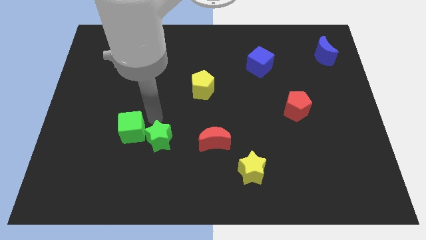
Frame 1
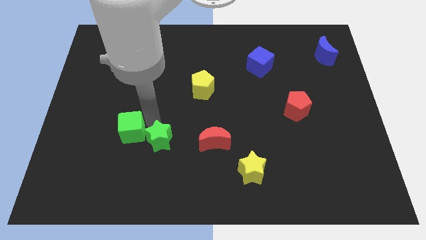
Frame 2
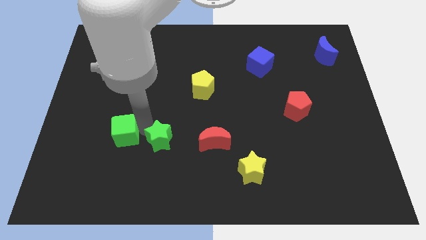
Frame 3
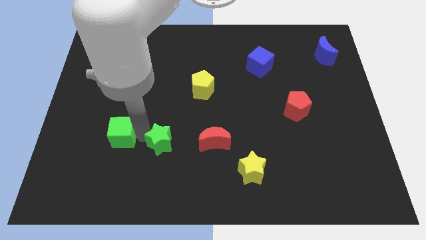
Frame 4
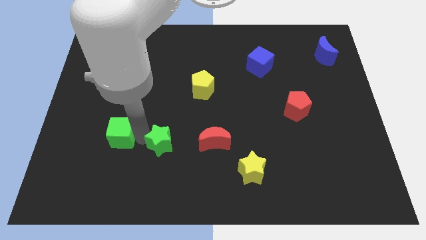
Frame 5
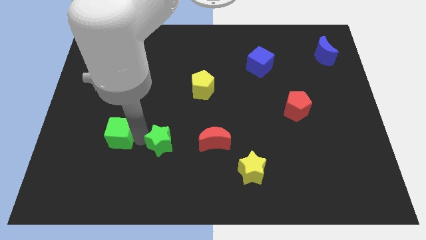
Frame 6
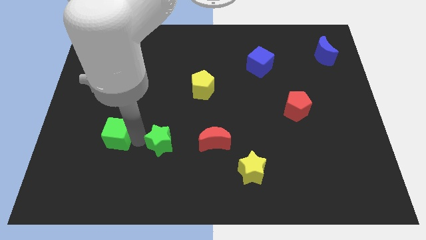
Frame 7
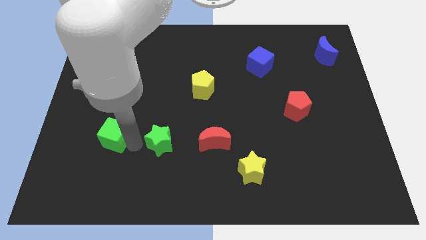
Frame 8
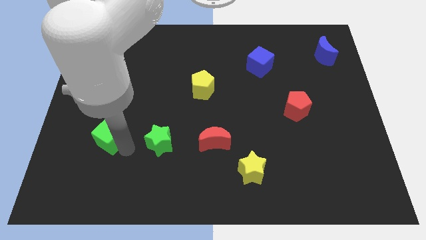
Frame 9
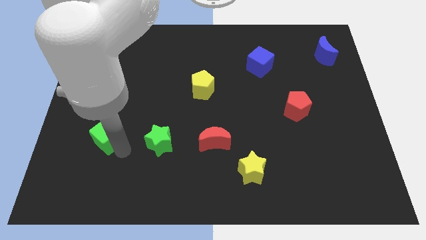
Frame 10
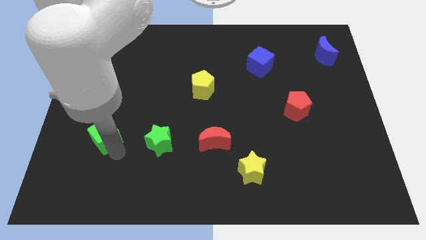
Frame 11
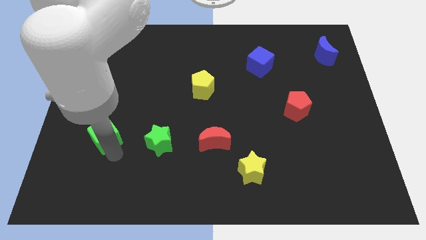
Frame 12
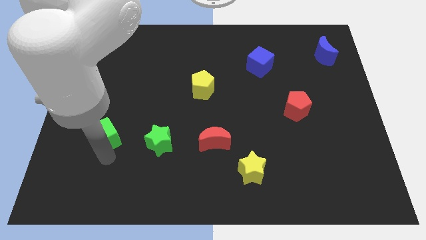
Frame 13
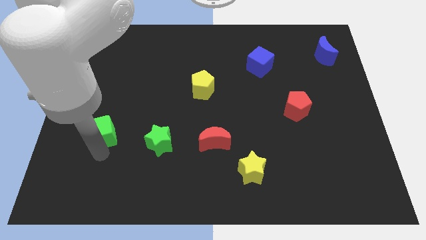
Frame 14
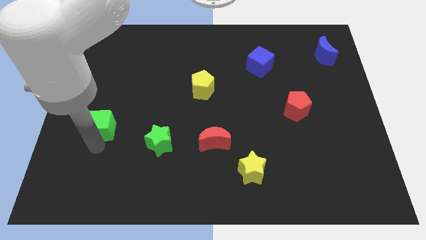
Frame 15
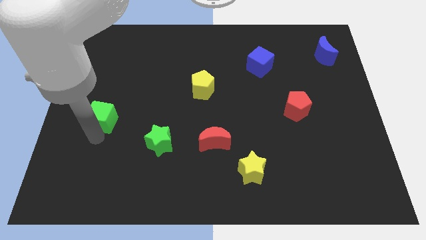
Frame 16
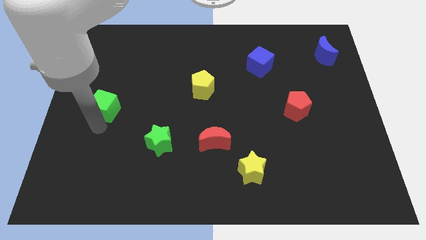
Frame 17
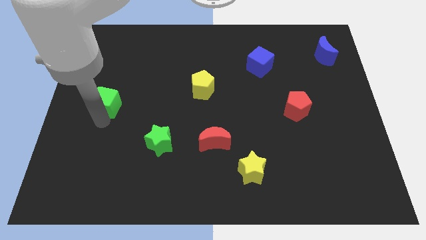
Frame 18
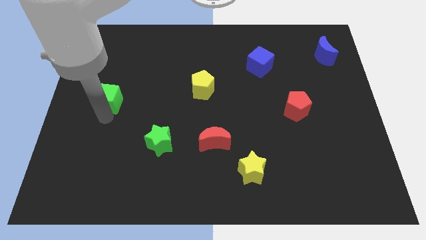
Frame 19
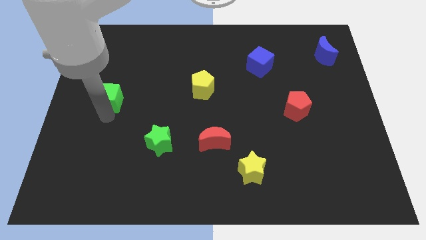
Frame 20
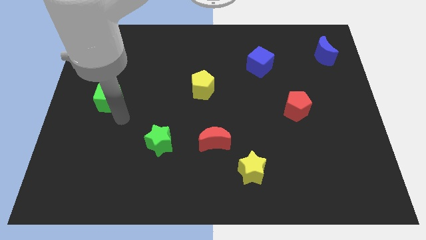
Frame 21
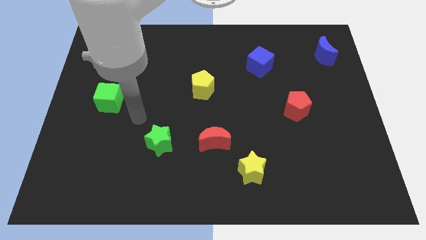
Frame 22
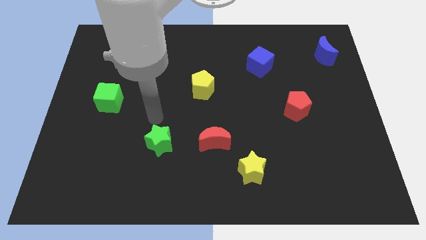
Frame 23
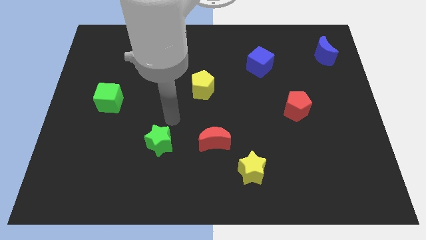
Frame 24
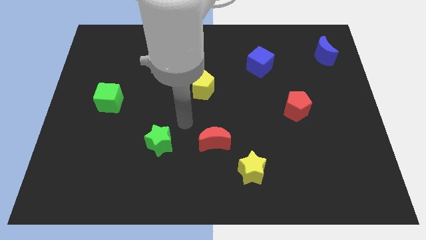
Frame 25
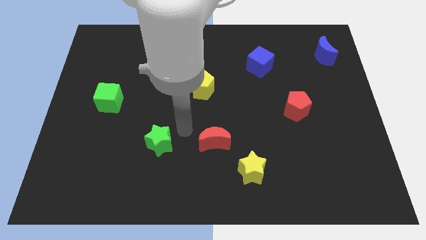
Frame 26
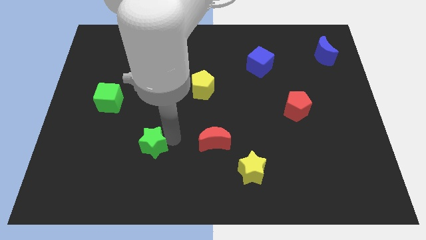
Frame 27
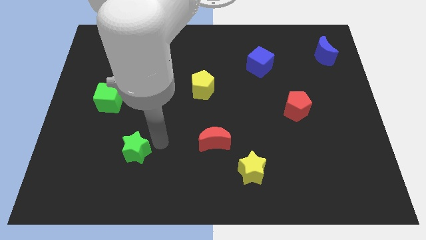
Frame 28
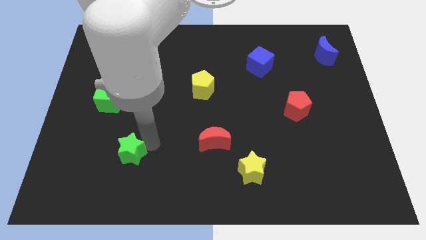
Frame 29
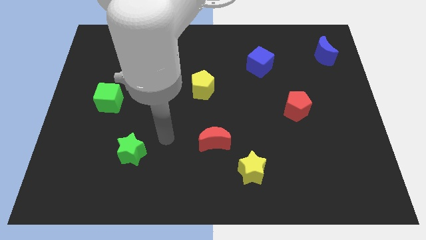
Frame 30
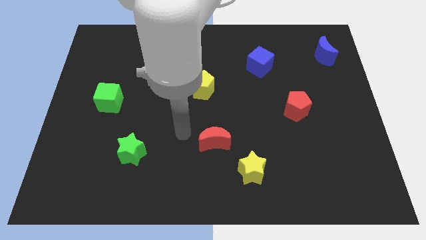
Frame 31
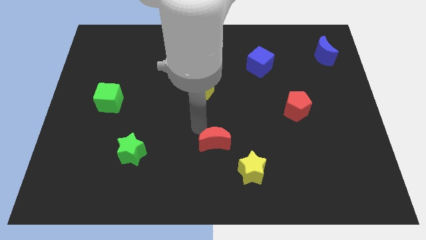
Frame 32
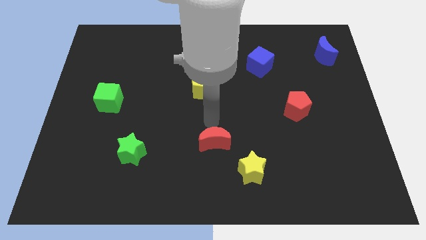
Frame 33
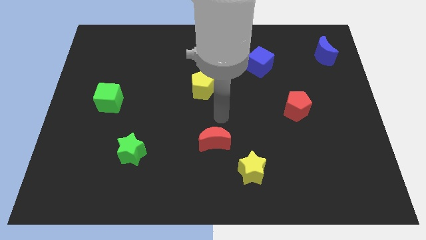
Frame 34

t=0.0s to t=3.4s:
separate green cube from green star

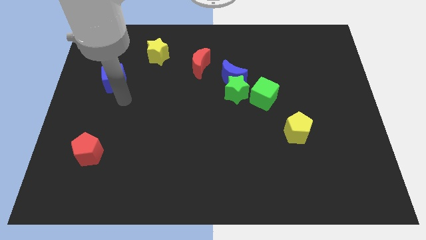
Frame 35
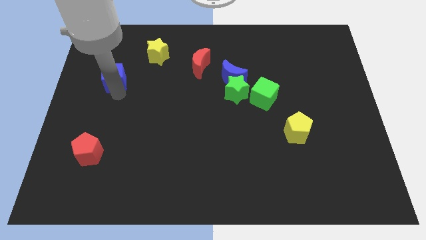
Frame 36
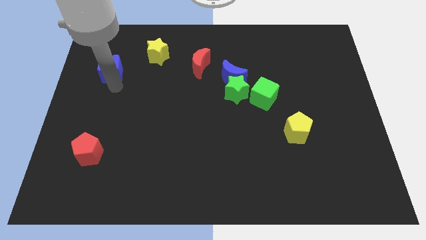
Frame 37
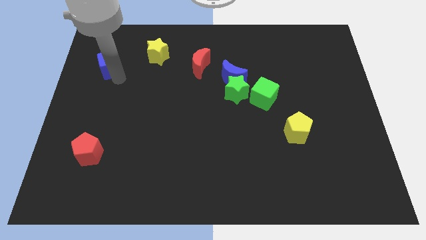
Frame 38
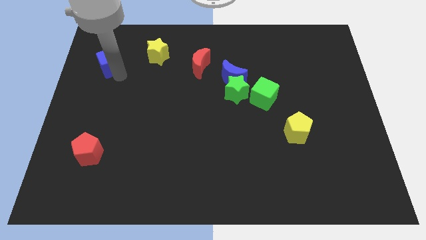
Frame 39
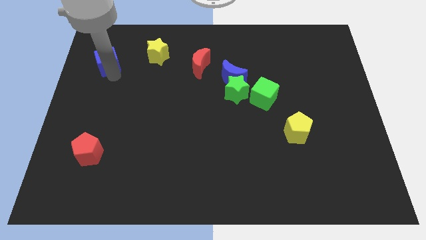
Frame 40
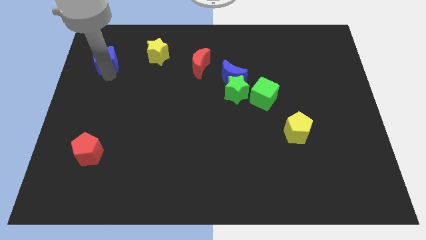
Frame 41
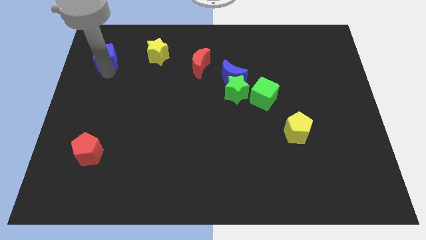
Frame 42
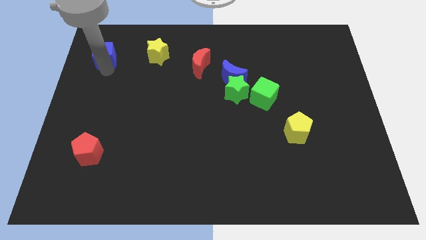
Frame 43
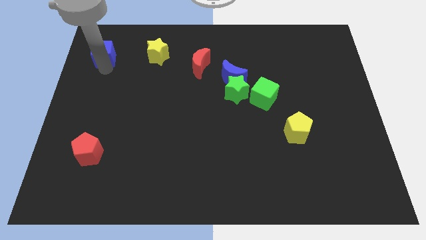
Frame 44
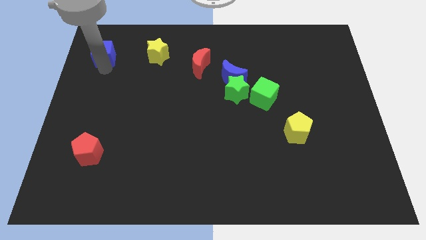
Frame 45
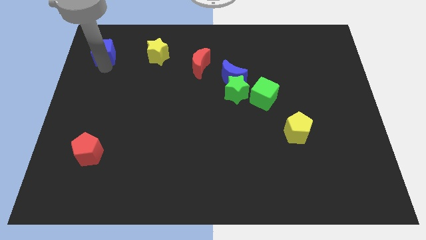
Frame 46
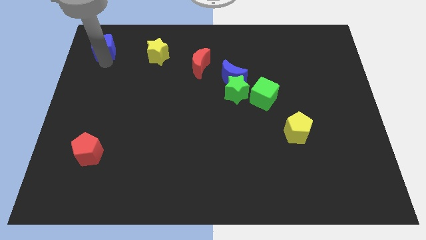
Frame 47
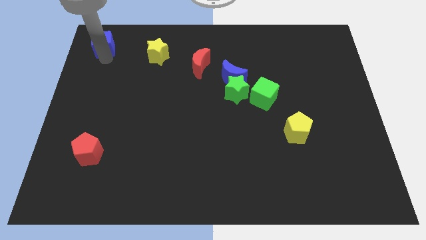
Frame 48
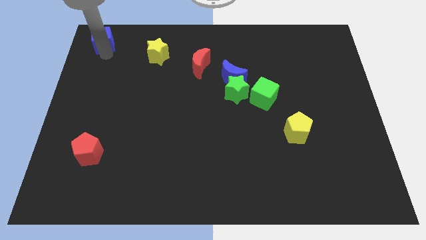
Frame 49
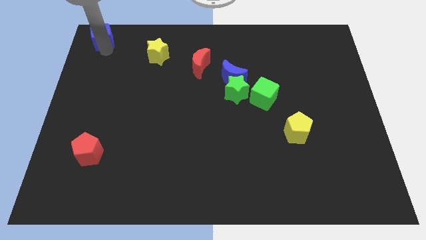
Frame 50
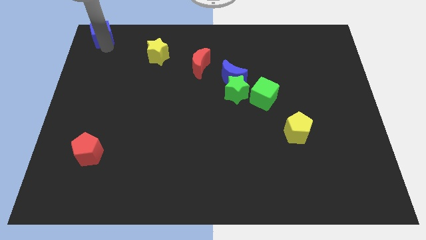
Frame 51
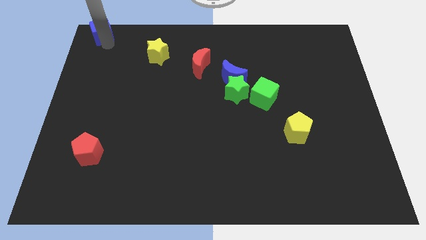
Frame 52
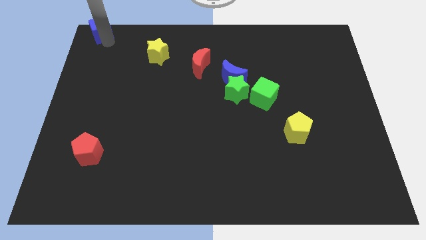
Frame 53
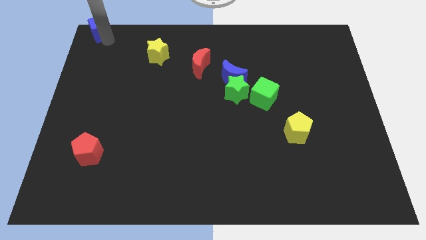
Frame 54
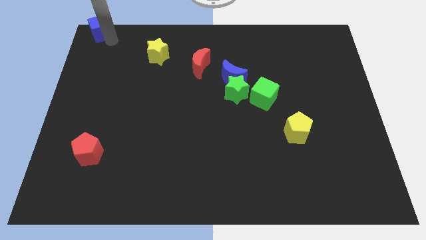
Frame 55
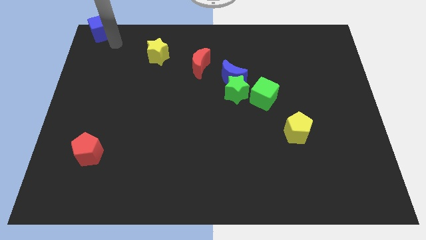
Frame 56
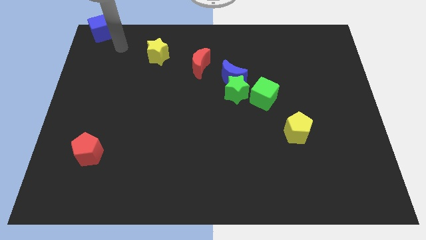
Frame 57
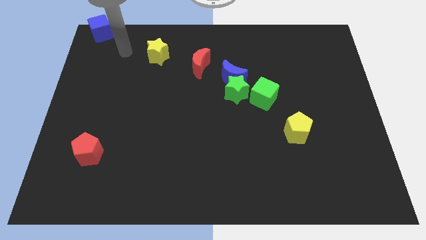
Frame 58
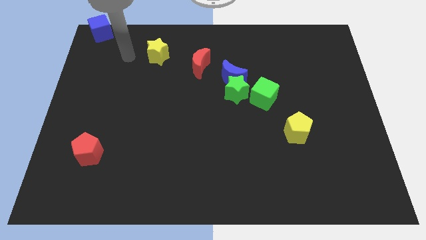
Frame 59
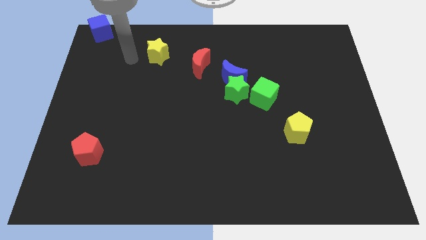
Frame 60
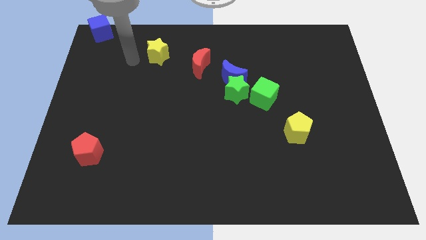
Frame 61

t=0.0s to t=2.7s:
place the blue cube towards top left corner of the board

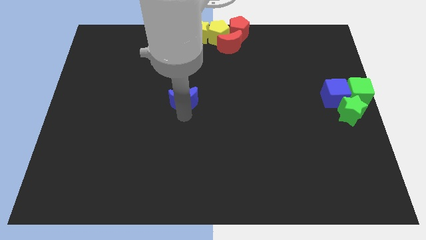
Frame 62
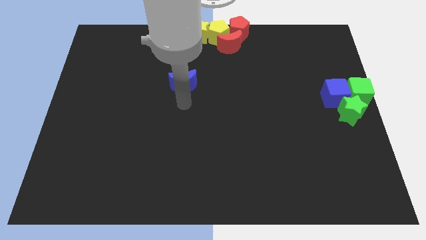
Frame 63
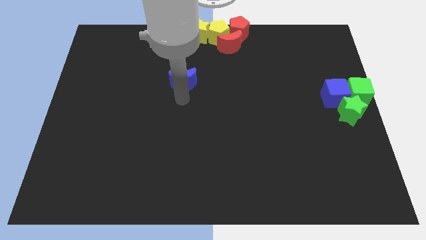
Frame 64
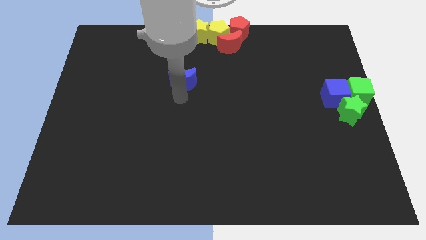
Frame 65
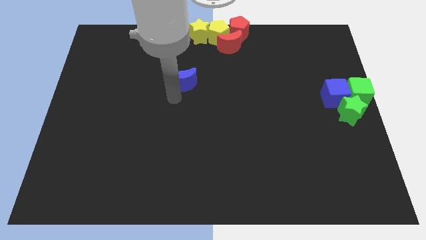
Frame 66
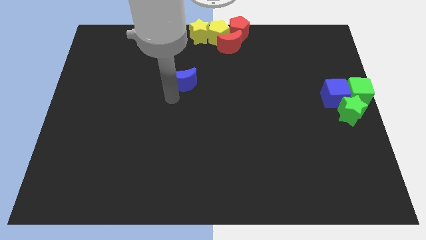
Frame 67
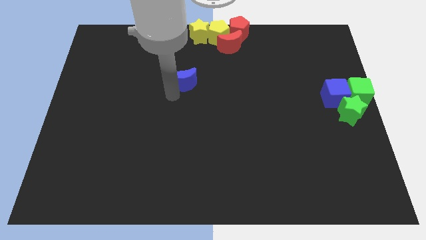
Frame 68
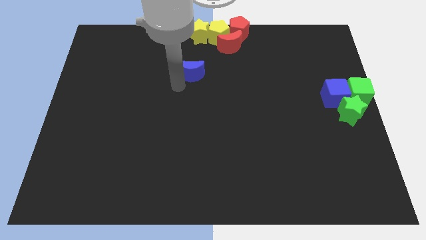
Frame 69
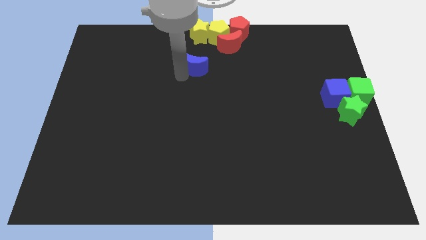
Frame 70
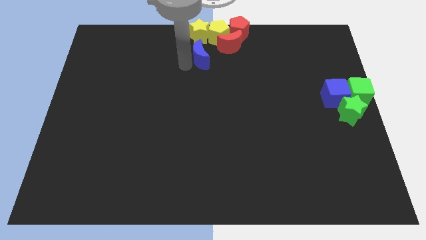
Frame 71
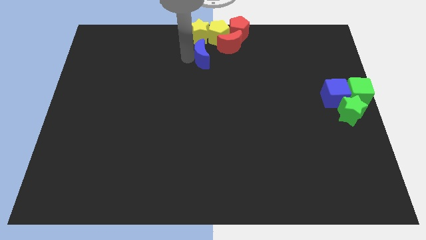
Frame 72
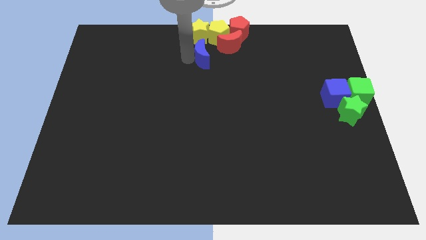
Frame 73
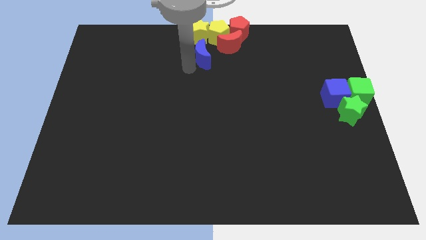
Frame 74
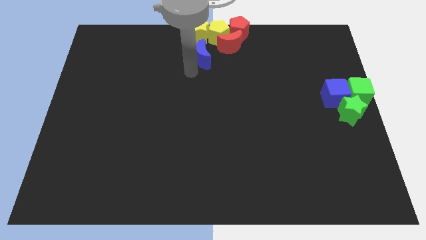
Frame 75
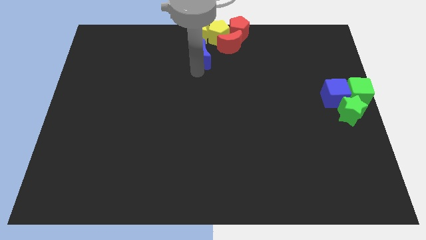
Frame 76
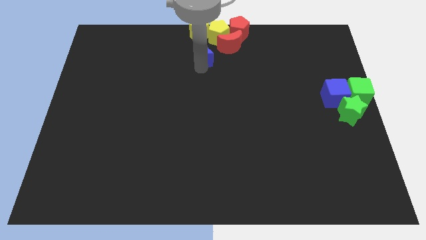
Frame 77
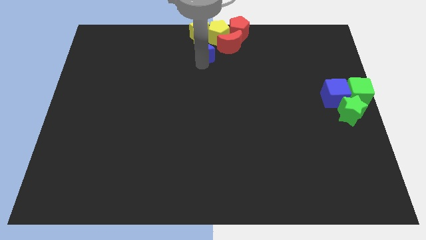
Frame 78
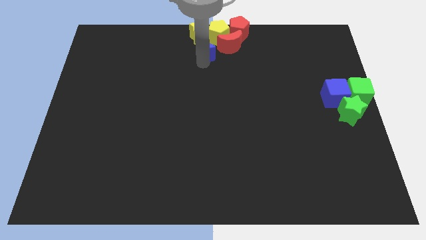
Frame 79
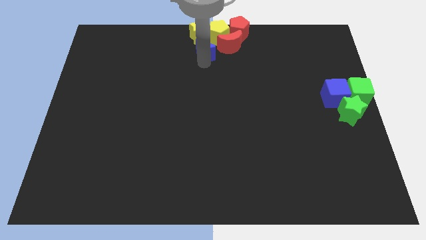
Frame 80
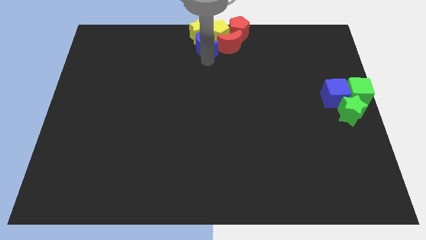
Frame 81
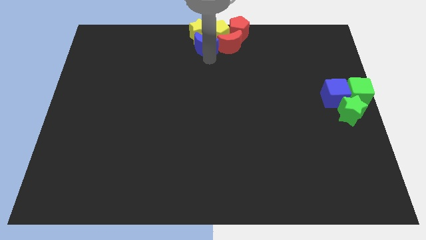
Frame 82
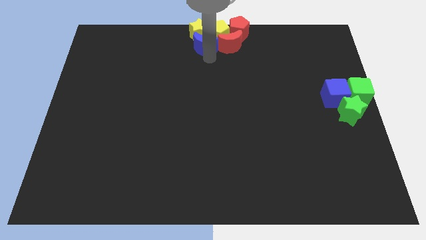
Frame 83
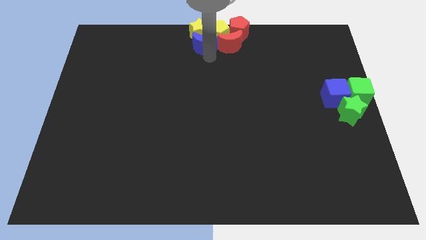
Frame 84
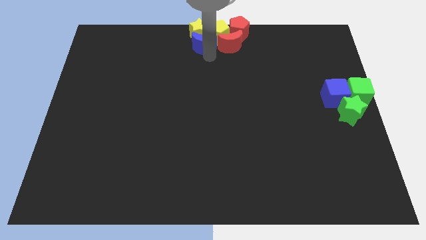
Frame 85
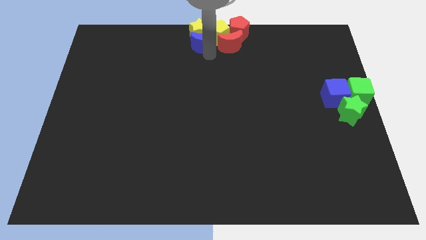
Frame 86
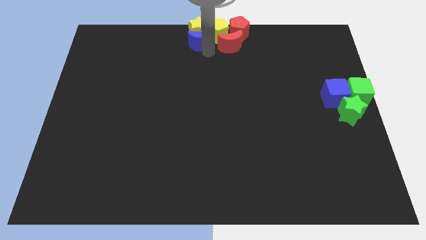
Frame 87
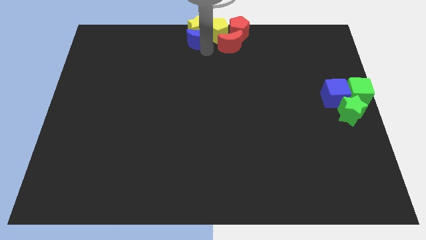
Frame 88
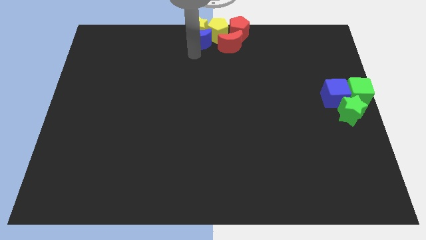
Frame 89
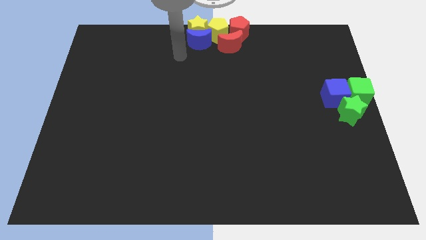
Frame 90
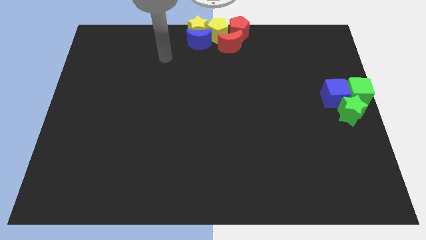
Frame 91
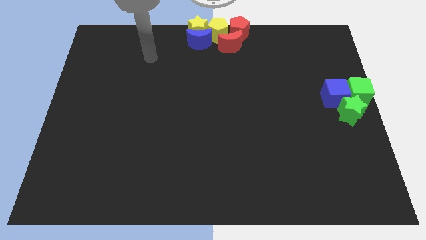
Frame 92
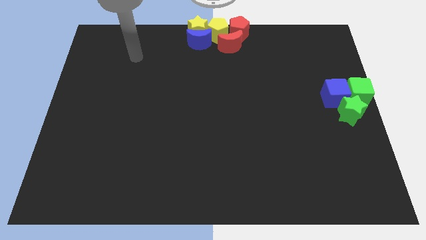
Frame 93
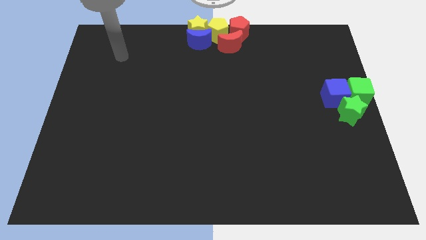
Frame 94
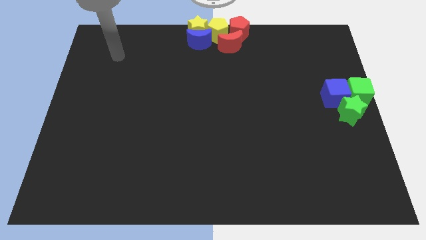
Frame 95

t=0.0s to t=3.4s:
move the blue crescent into the yellow blocks
